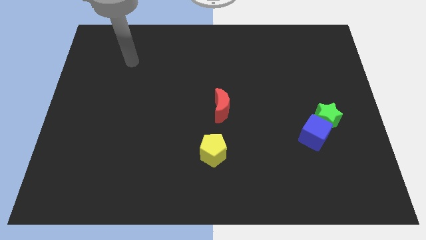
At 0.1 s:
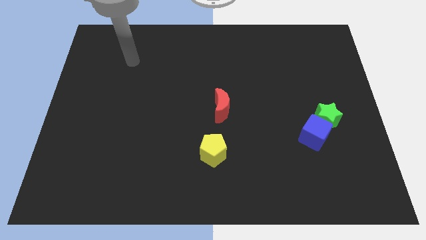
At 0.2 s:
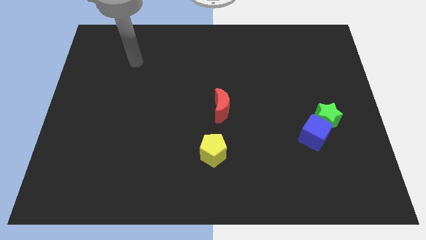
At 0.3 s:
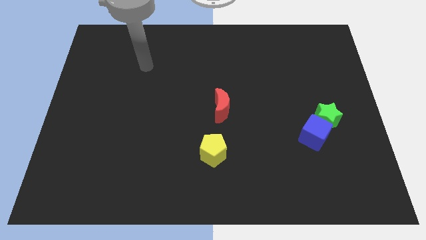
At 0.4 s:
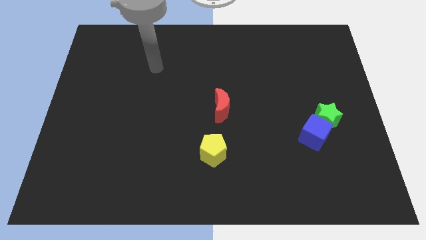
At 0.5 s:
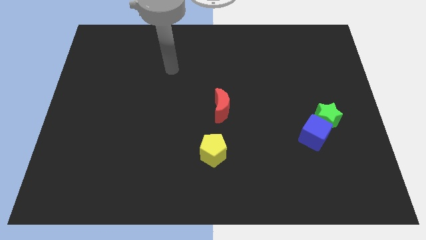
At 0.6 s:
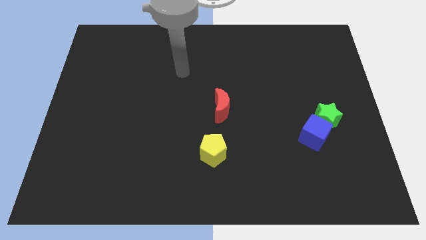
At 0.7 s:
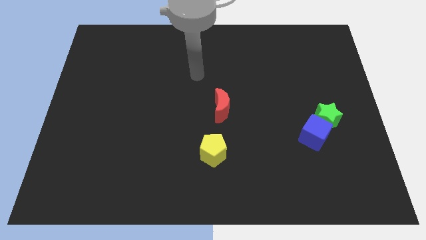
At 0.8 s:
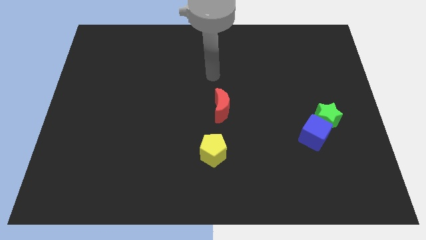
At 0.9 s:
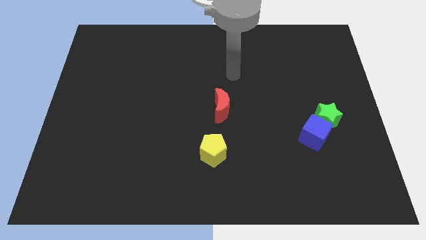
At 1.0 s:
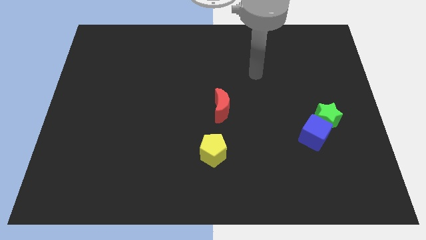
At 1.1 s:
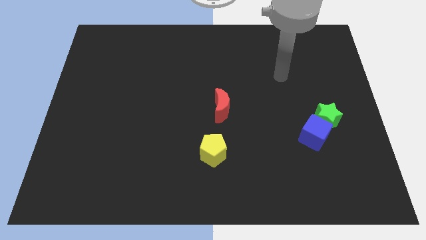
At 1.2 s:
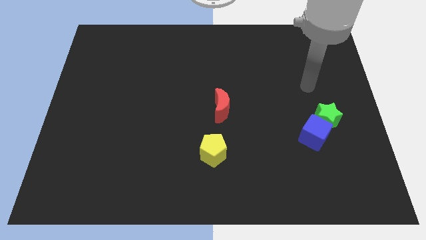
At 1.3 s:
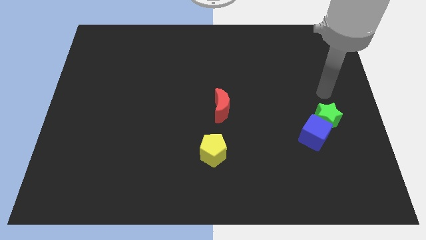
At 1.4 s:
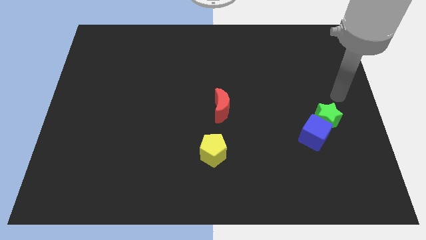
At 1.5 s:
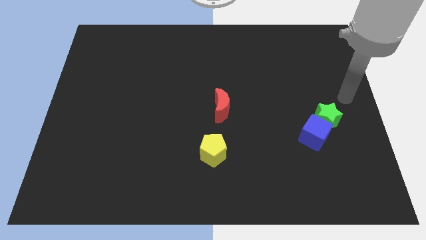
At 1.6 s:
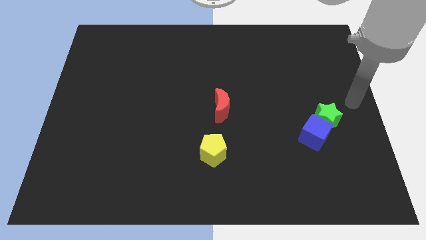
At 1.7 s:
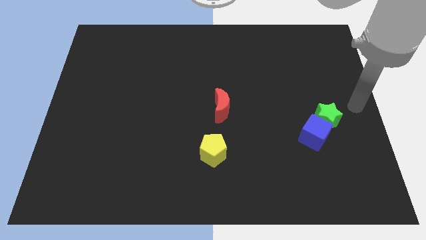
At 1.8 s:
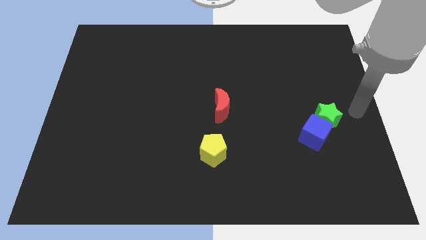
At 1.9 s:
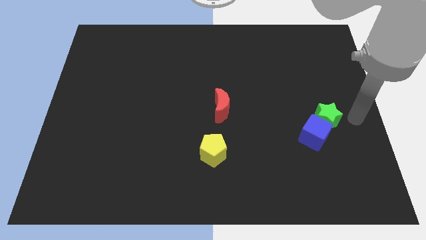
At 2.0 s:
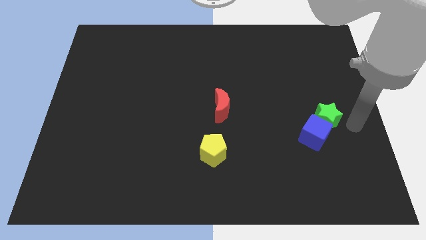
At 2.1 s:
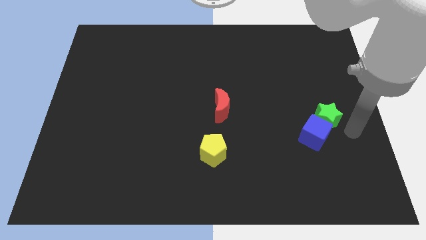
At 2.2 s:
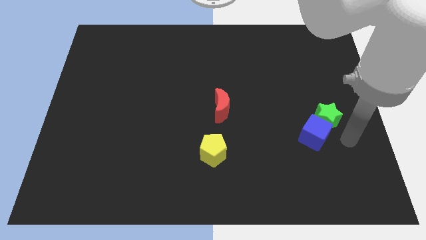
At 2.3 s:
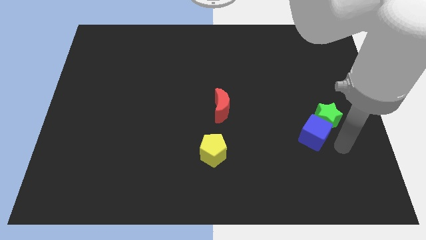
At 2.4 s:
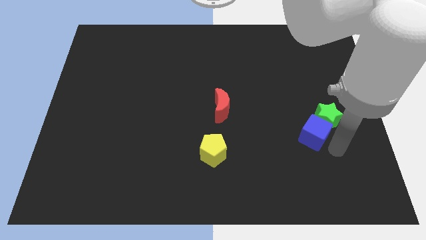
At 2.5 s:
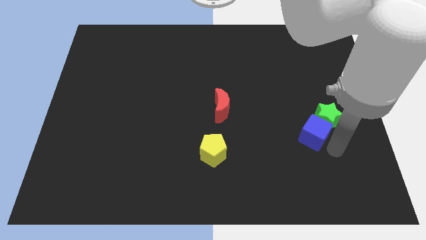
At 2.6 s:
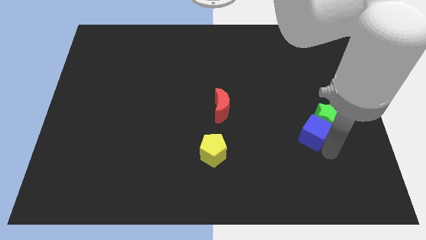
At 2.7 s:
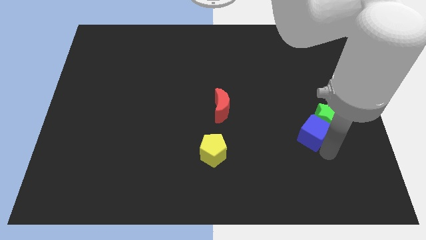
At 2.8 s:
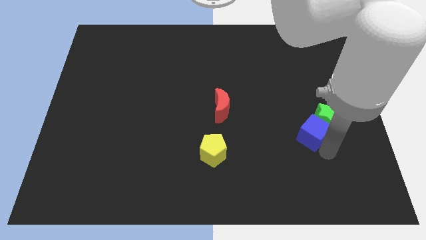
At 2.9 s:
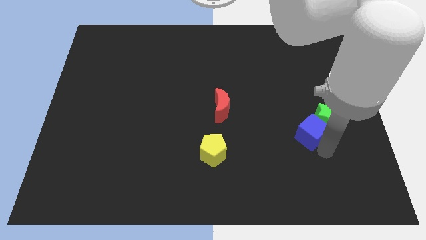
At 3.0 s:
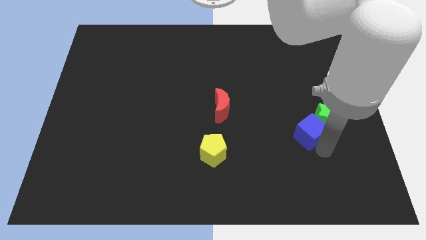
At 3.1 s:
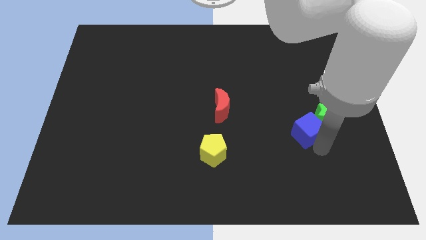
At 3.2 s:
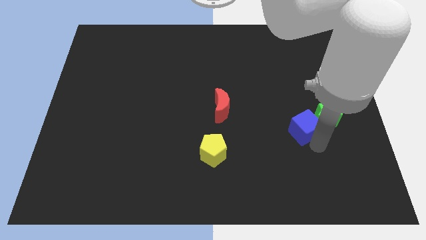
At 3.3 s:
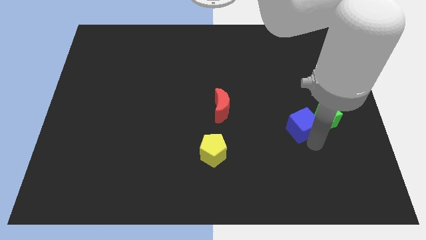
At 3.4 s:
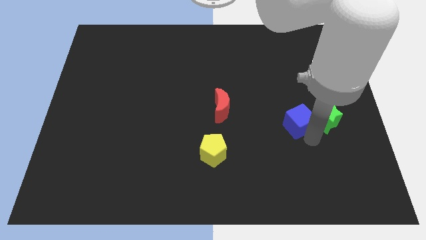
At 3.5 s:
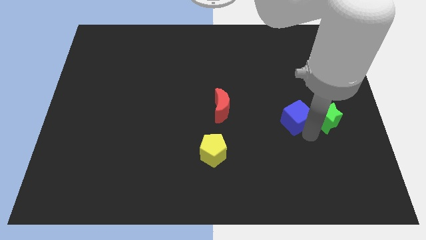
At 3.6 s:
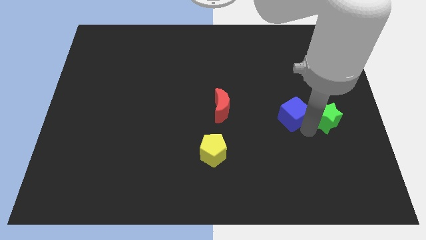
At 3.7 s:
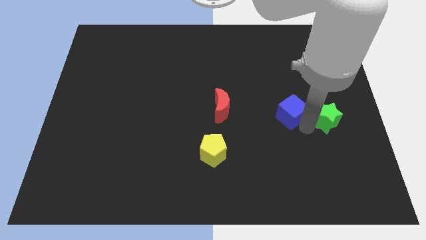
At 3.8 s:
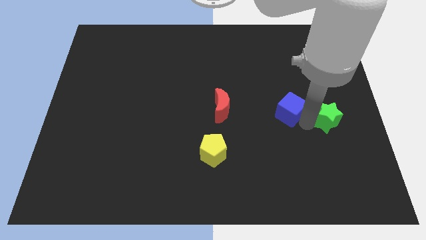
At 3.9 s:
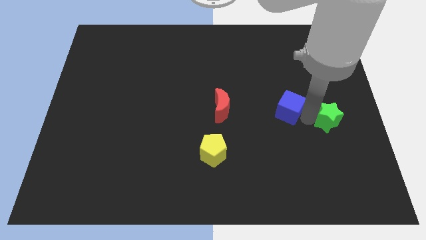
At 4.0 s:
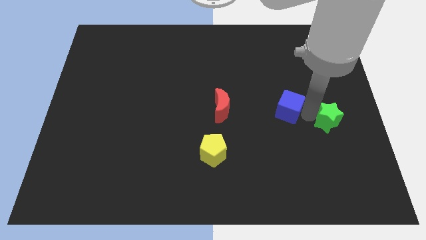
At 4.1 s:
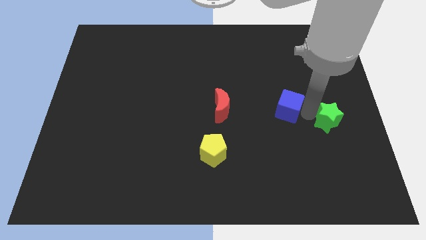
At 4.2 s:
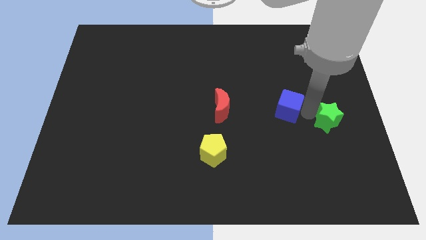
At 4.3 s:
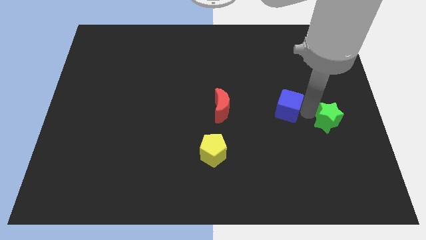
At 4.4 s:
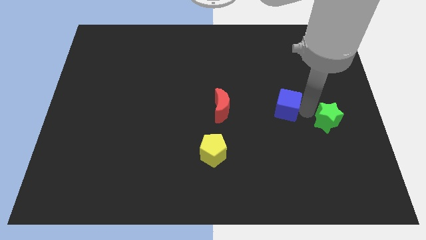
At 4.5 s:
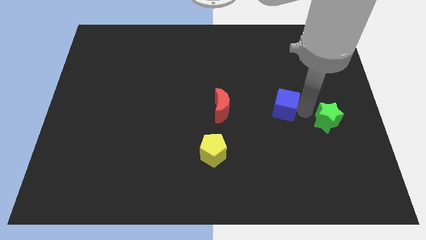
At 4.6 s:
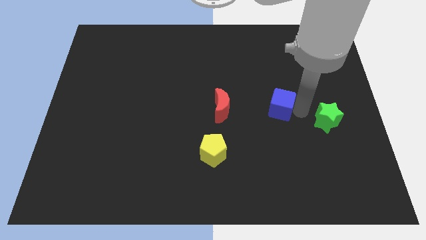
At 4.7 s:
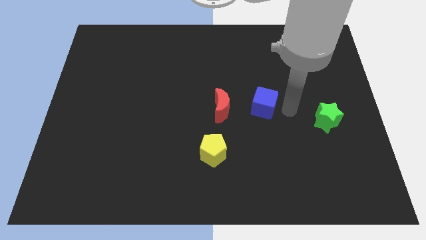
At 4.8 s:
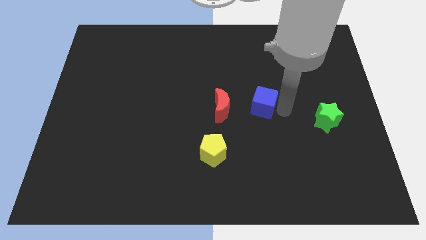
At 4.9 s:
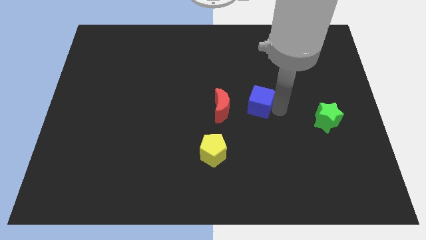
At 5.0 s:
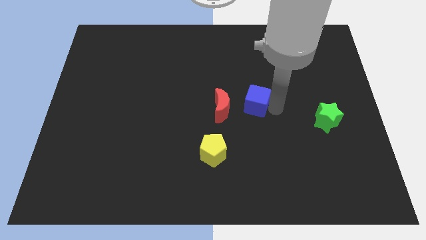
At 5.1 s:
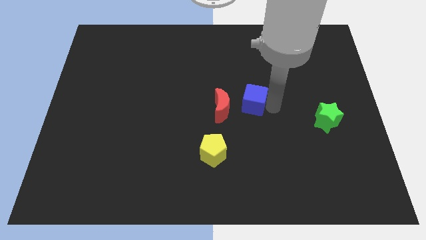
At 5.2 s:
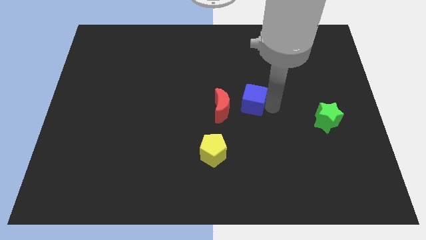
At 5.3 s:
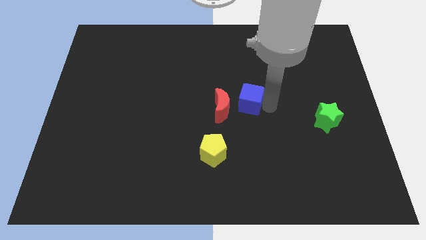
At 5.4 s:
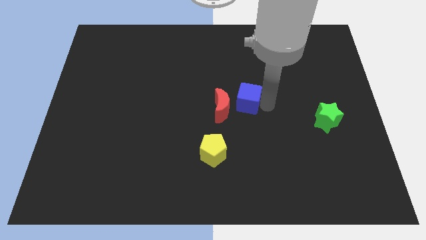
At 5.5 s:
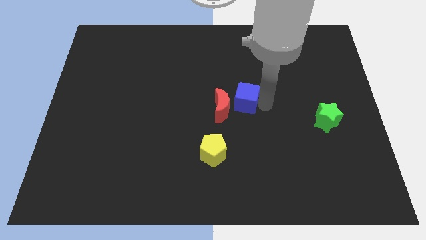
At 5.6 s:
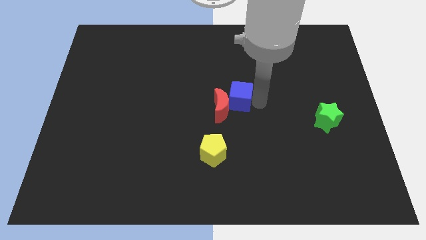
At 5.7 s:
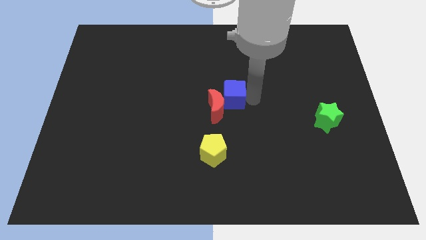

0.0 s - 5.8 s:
put the blue block towards the red block

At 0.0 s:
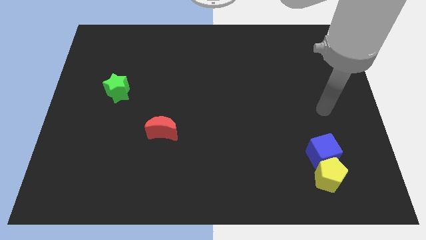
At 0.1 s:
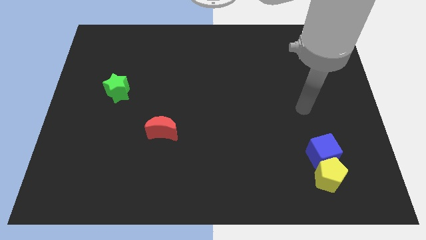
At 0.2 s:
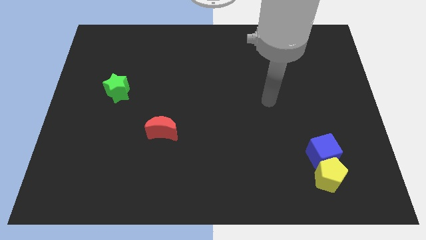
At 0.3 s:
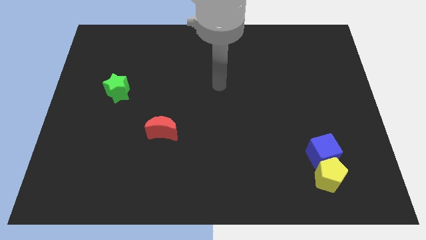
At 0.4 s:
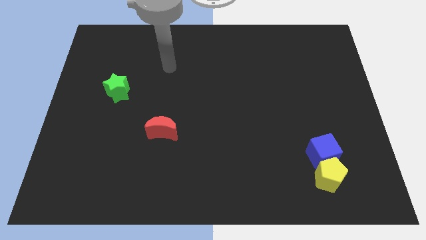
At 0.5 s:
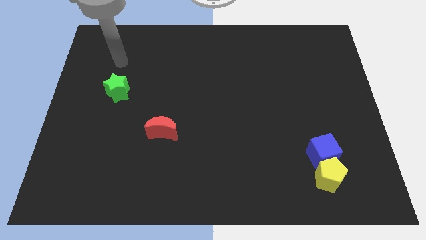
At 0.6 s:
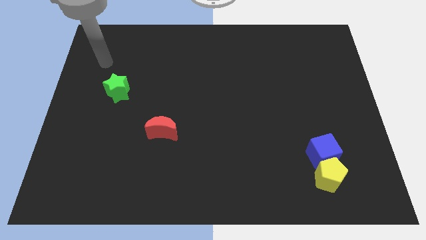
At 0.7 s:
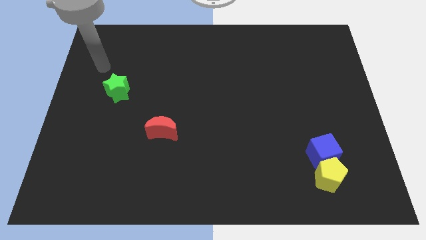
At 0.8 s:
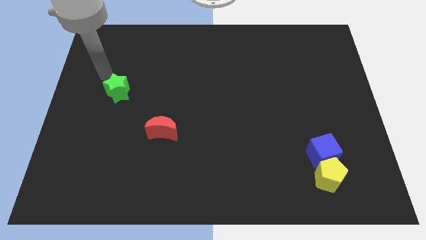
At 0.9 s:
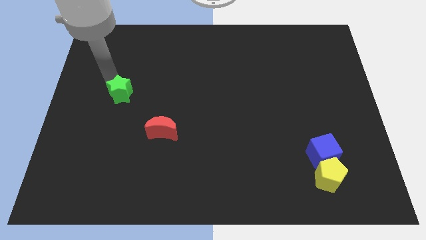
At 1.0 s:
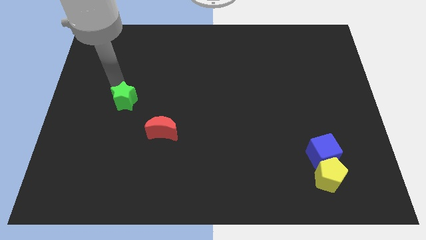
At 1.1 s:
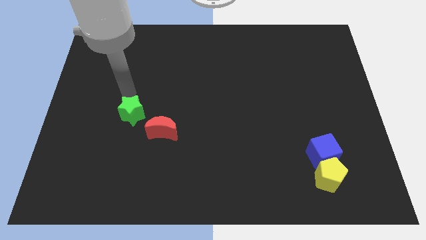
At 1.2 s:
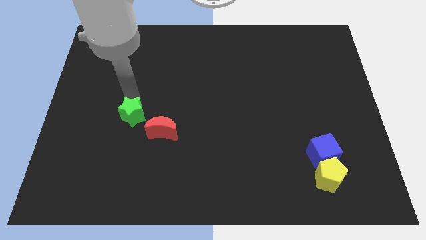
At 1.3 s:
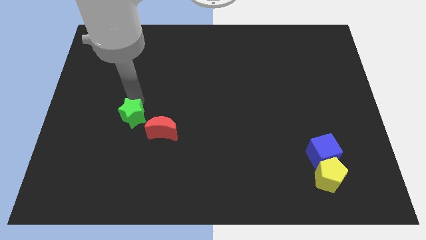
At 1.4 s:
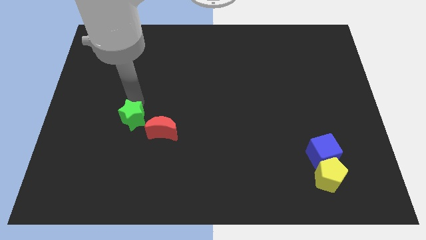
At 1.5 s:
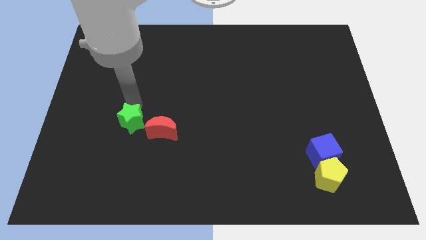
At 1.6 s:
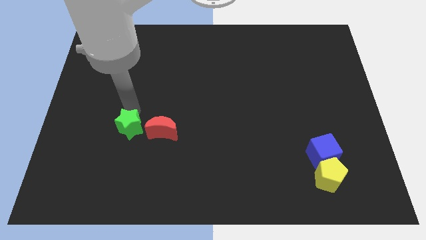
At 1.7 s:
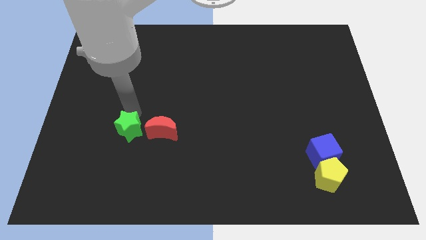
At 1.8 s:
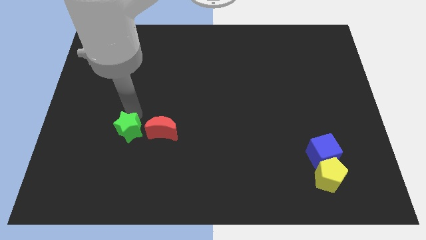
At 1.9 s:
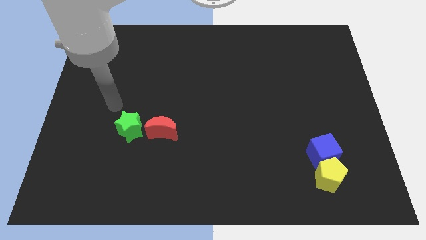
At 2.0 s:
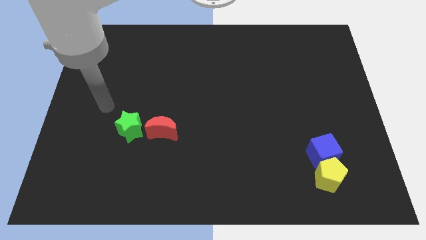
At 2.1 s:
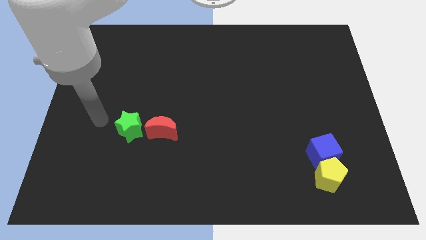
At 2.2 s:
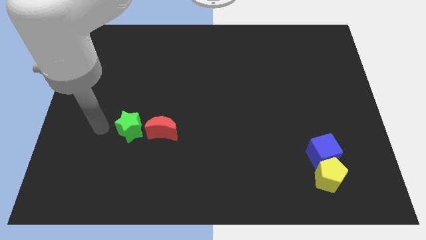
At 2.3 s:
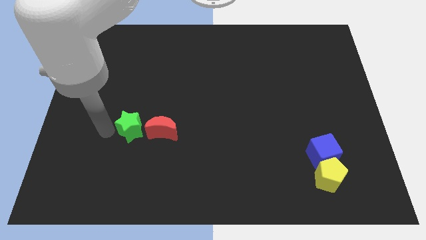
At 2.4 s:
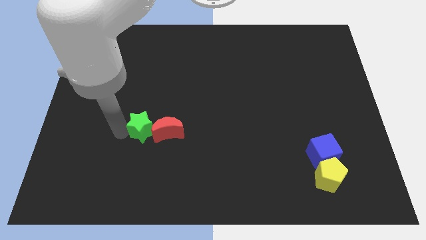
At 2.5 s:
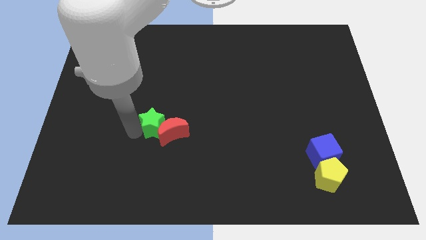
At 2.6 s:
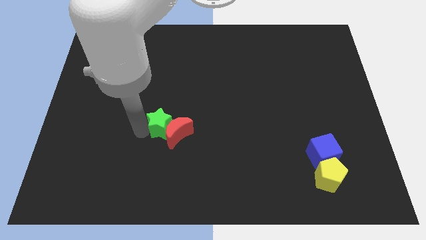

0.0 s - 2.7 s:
push the green star towards the red moon

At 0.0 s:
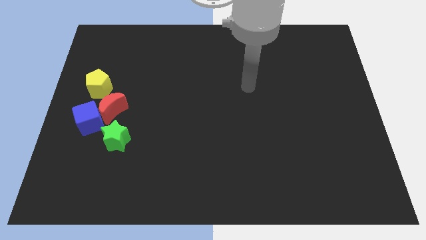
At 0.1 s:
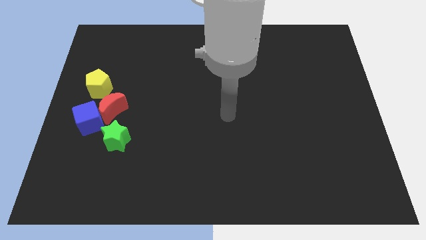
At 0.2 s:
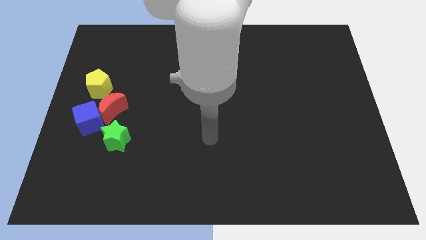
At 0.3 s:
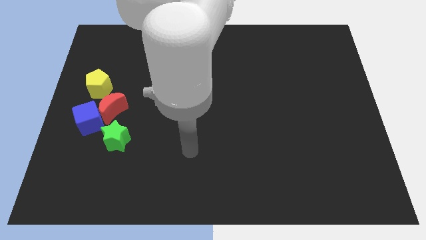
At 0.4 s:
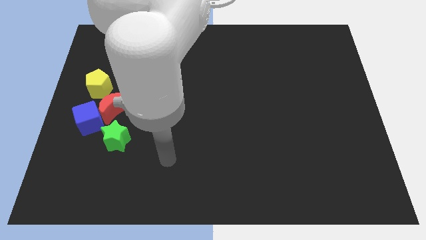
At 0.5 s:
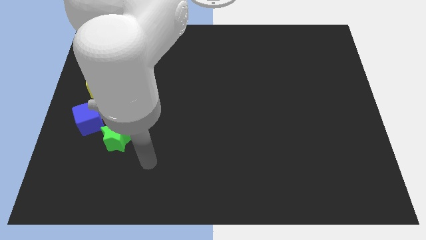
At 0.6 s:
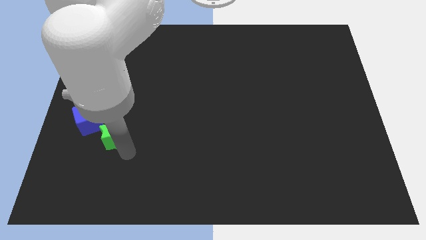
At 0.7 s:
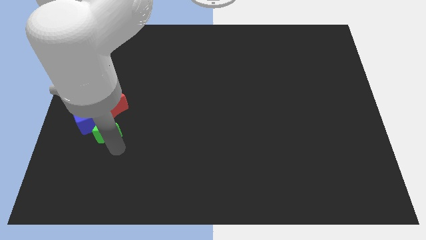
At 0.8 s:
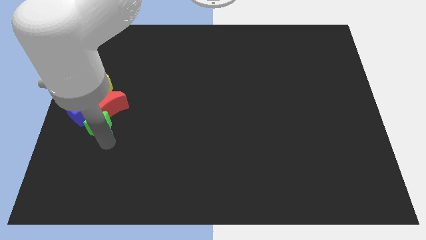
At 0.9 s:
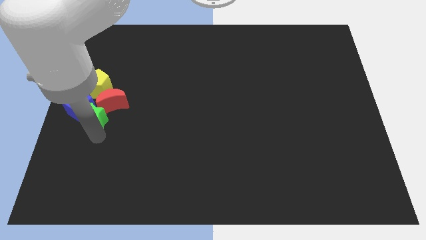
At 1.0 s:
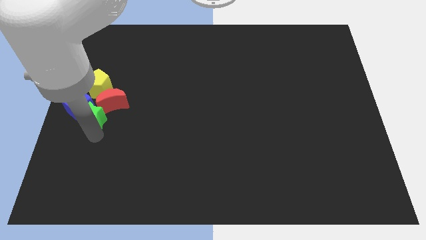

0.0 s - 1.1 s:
move the star towards the blue cube
